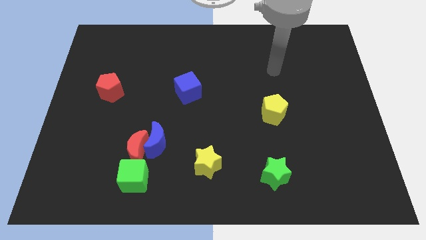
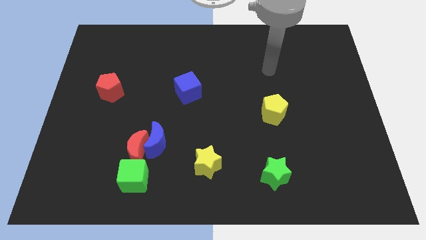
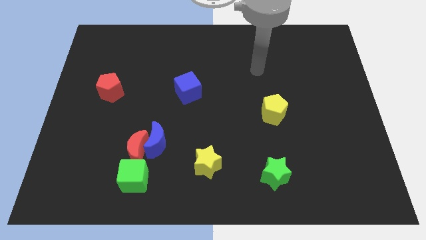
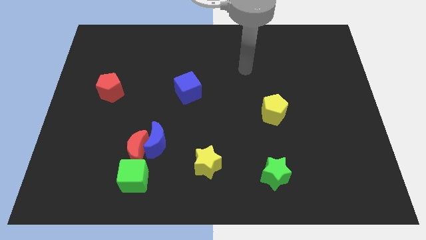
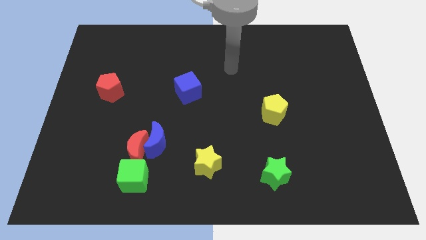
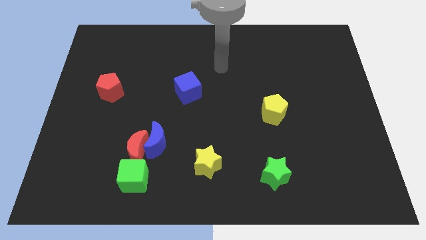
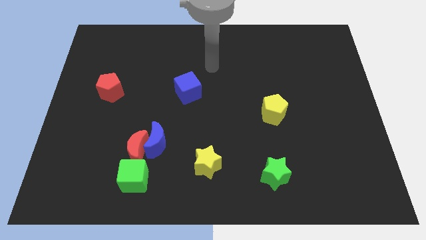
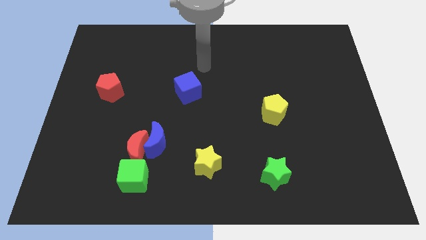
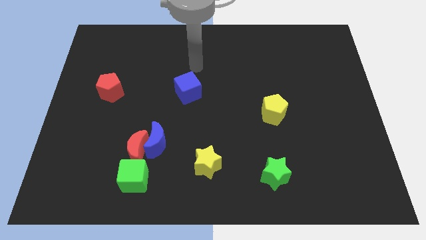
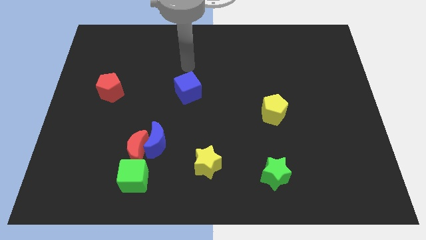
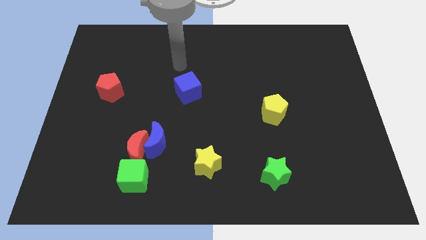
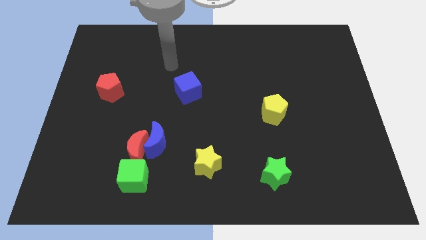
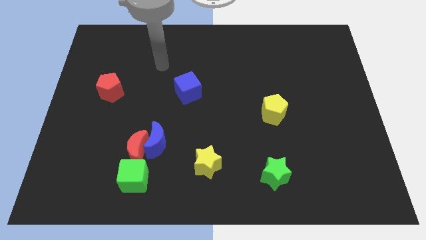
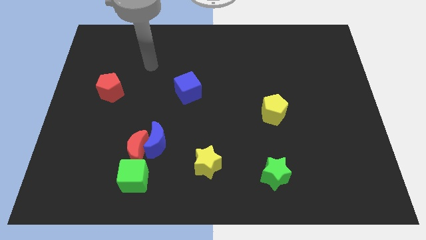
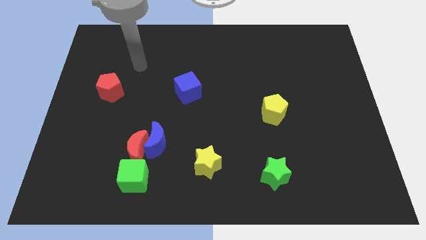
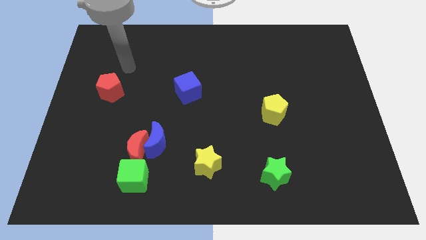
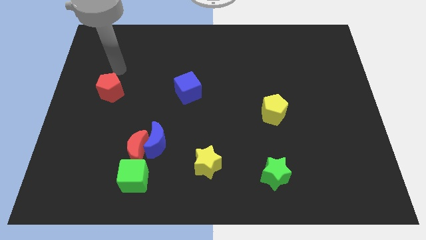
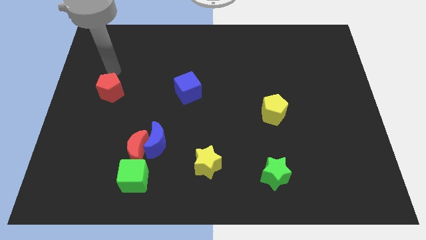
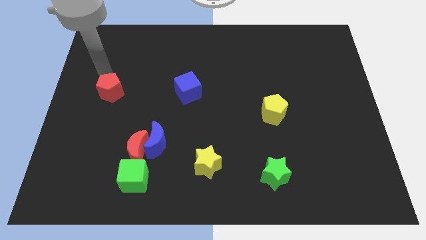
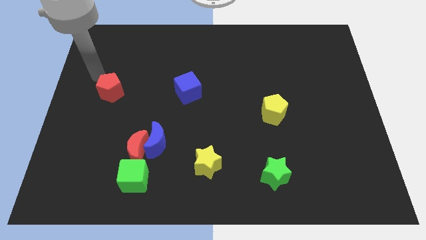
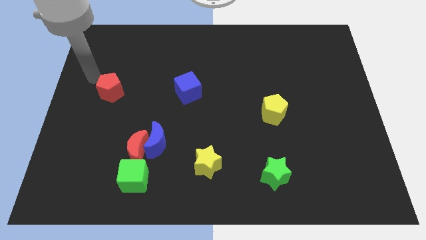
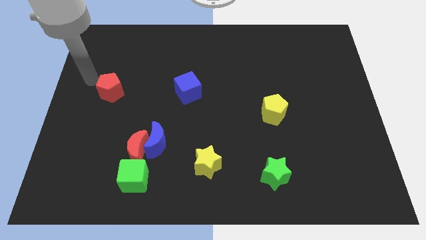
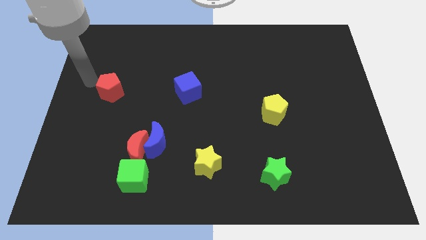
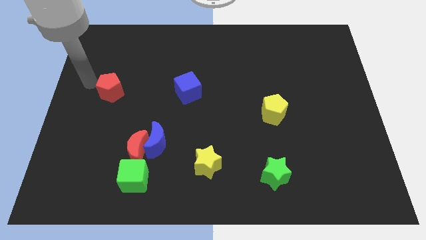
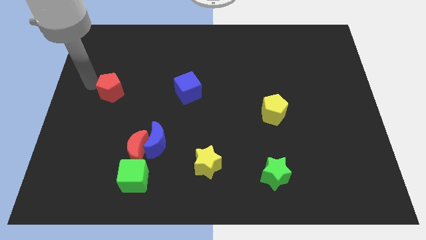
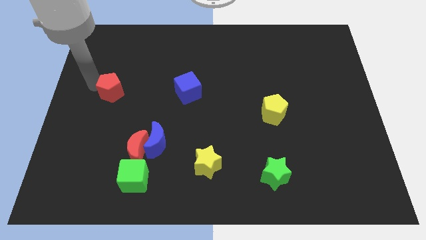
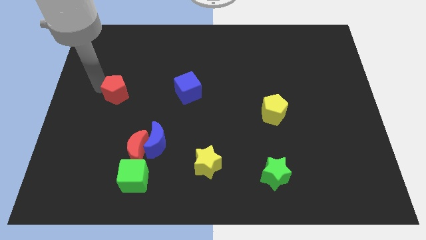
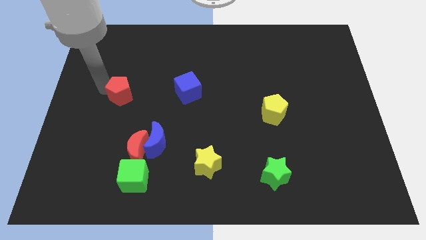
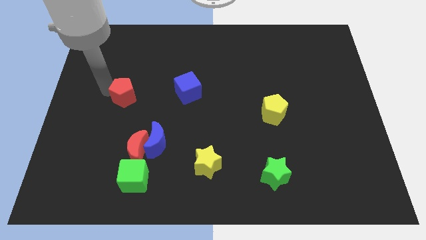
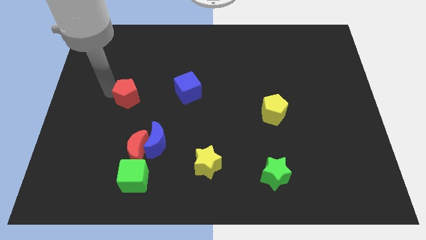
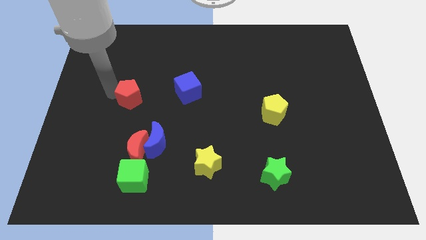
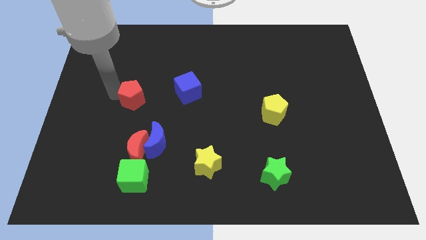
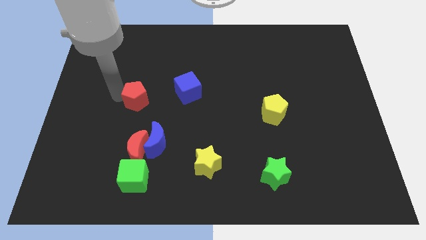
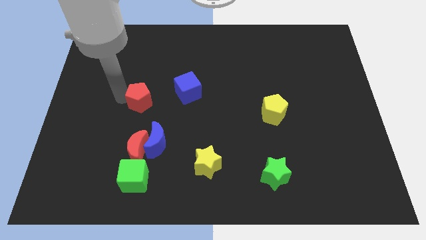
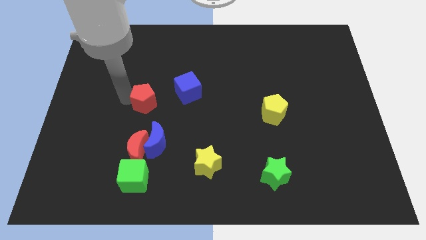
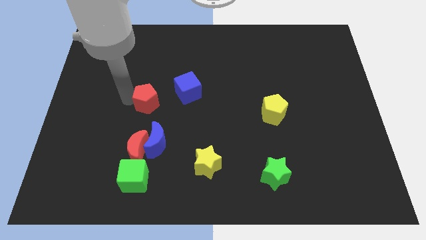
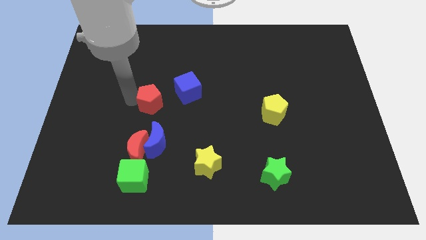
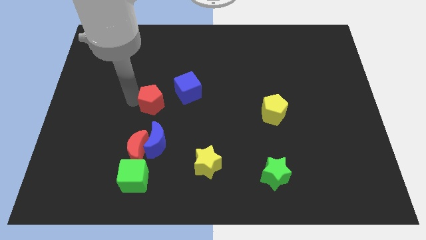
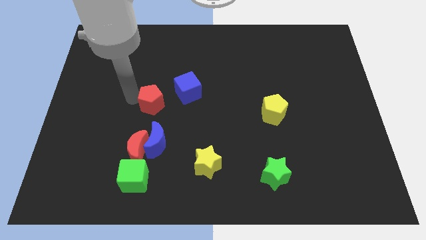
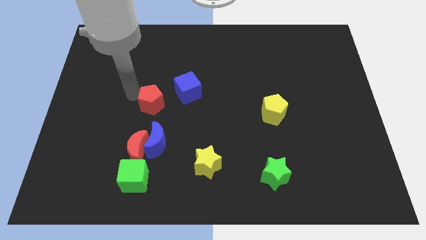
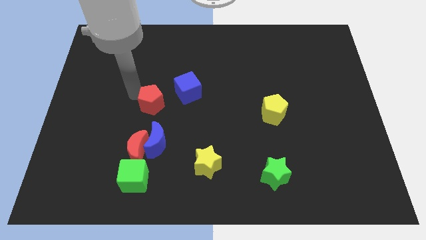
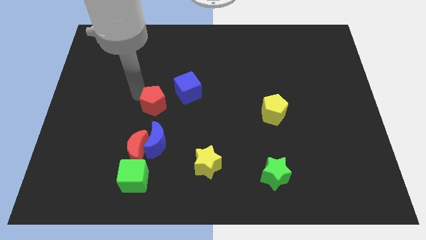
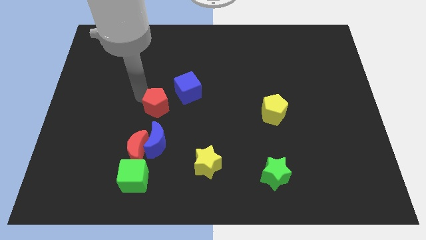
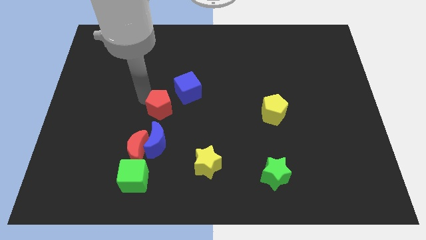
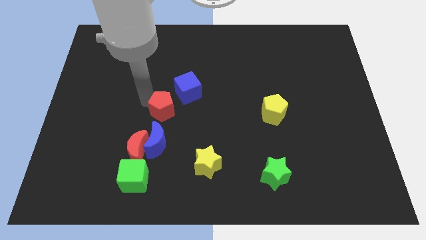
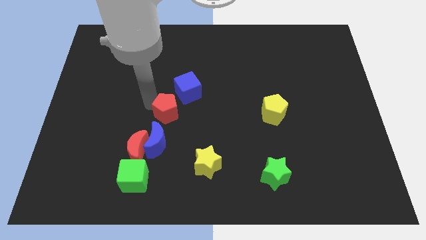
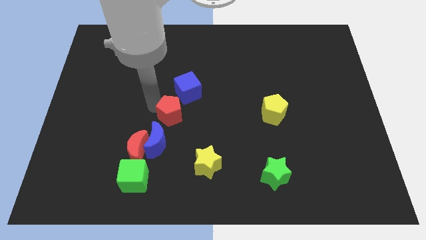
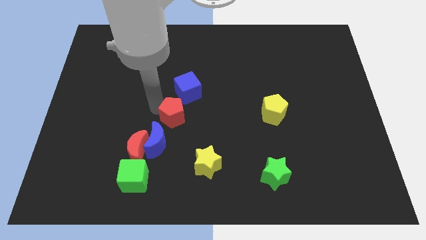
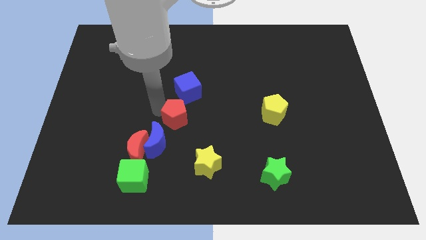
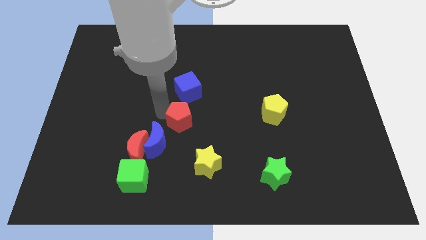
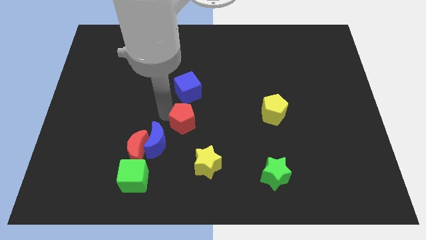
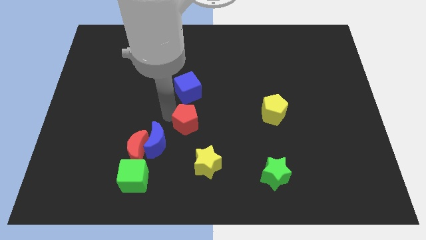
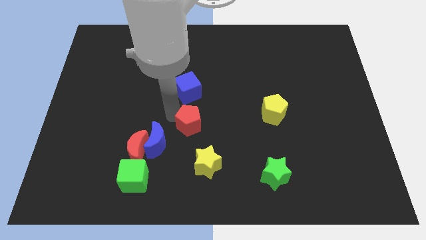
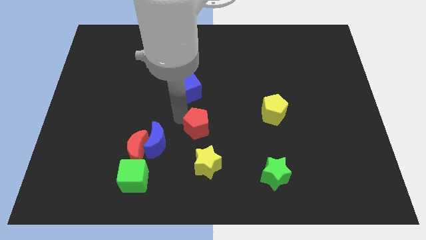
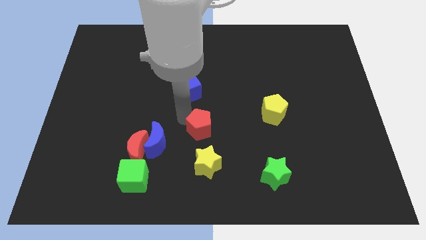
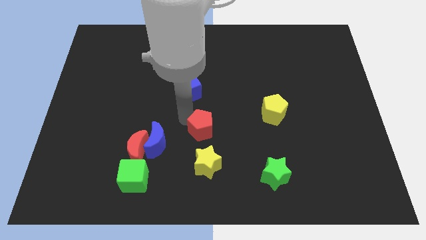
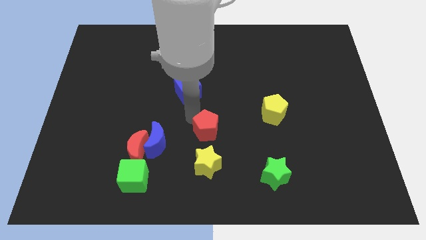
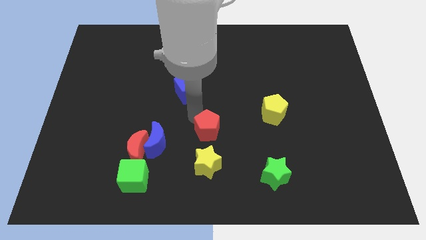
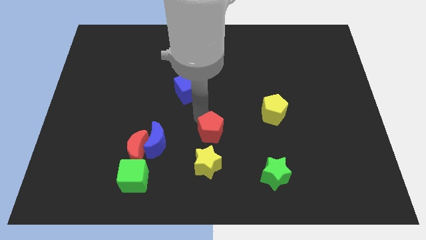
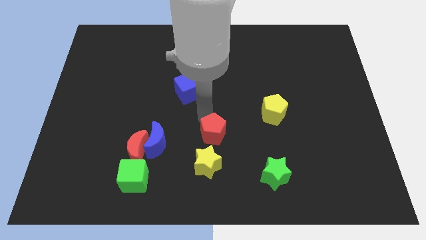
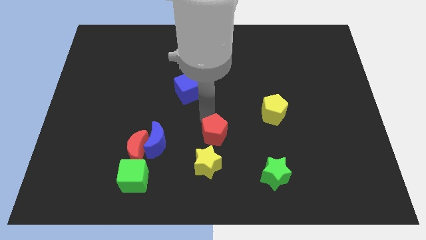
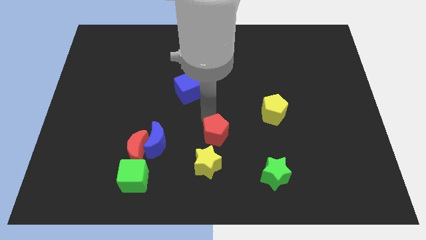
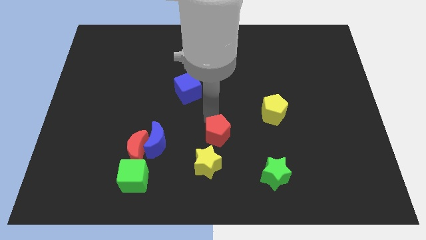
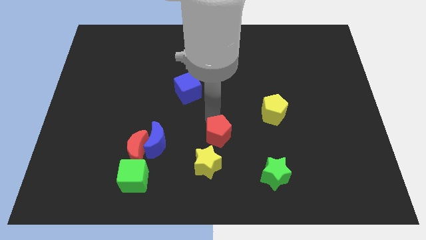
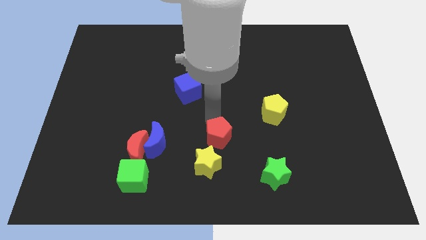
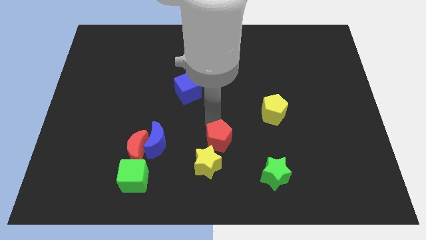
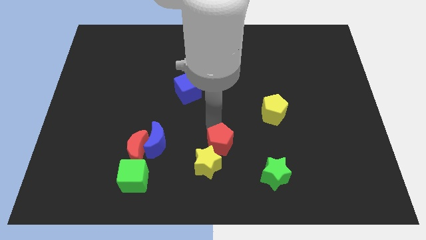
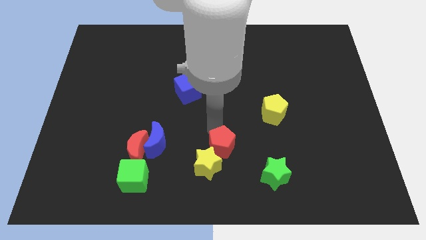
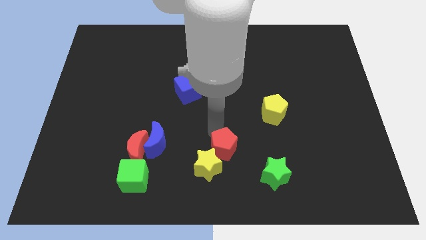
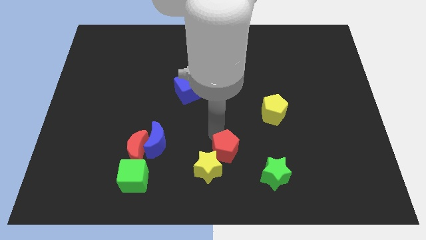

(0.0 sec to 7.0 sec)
move the red pentagon to the yellow star

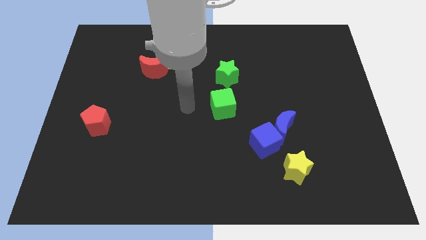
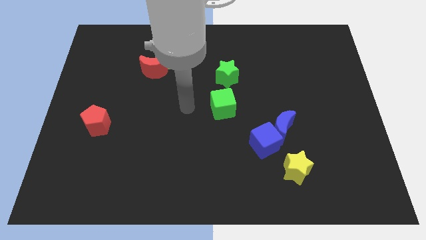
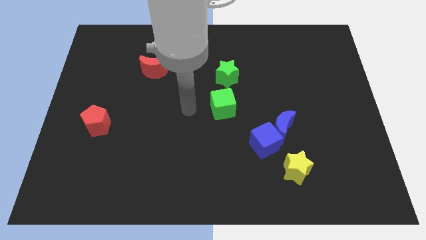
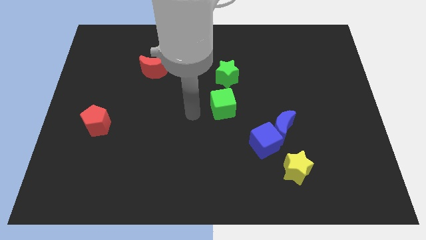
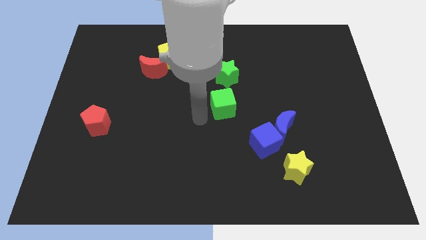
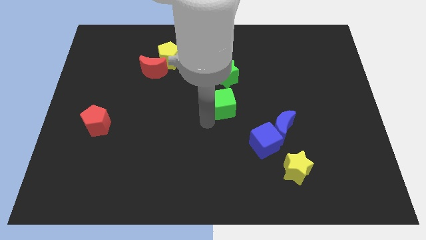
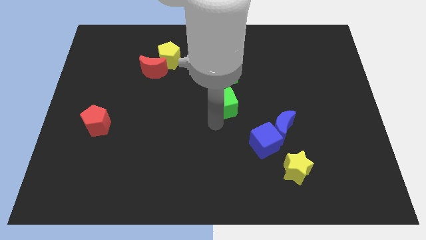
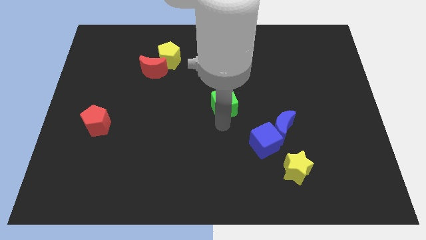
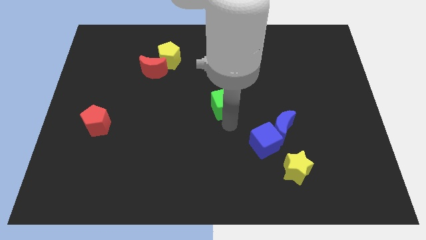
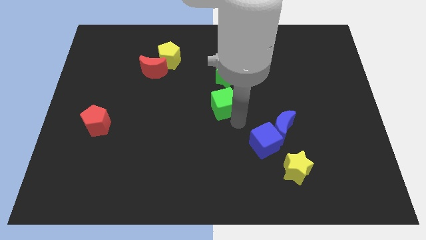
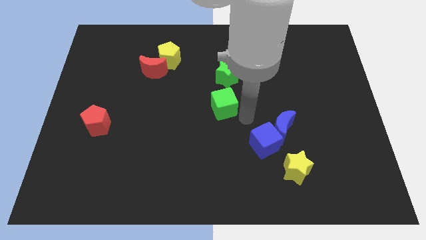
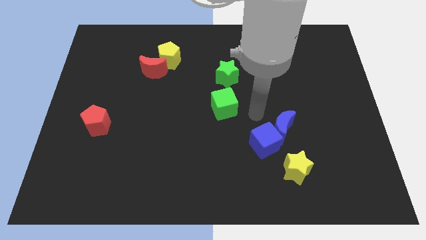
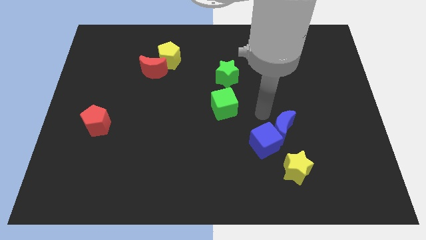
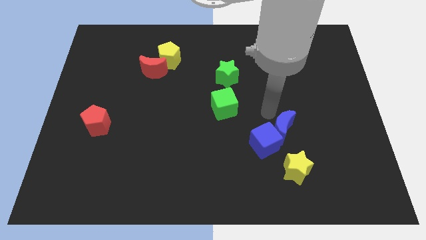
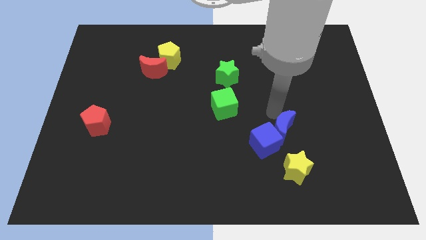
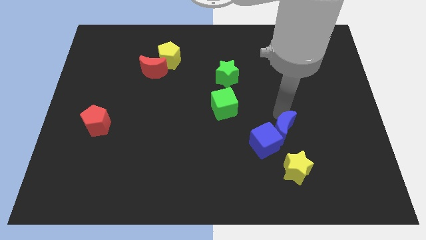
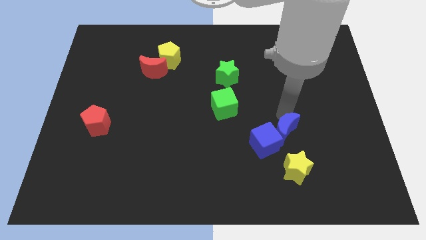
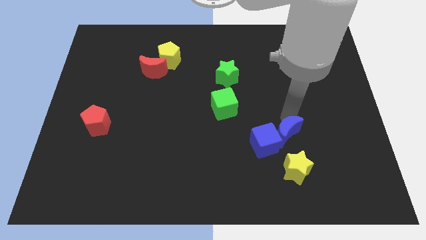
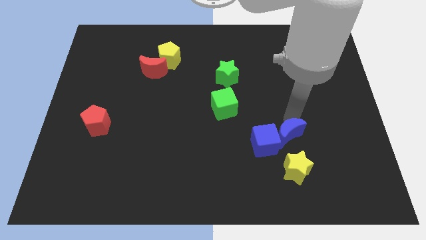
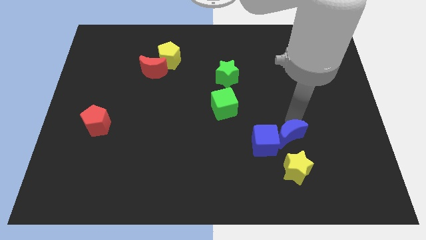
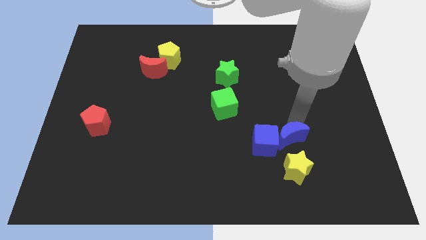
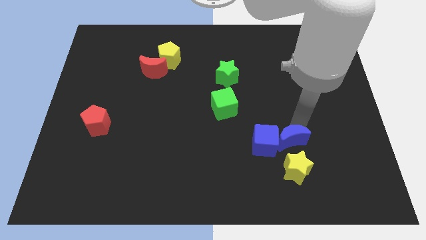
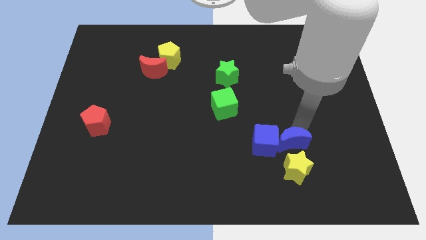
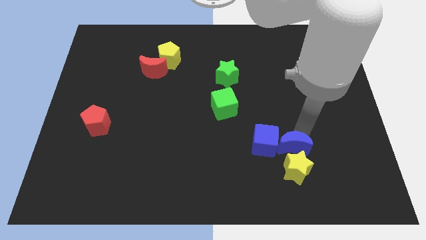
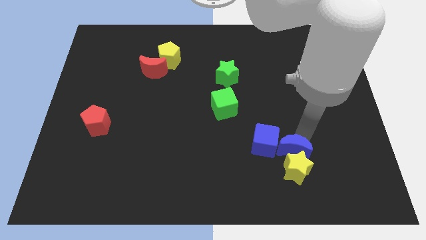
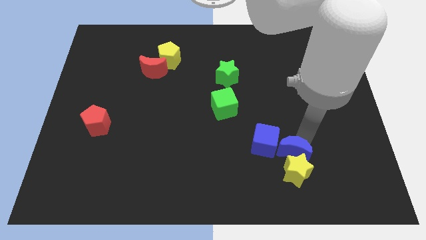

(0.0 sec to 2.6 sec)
slide the blue moon towards the yellow star
